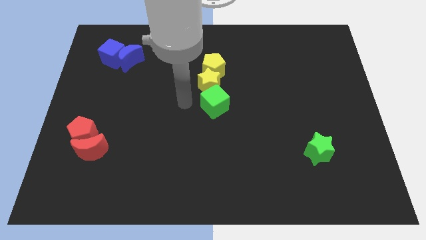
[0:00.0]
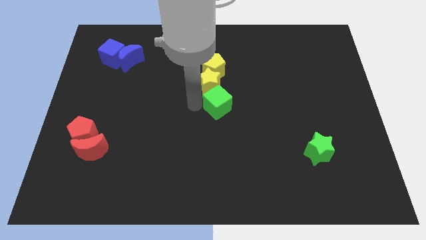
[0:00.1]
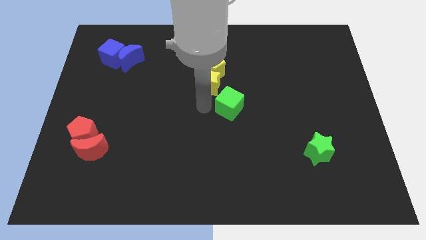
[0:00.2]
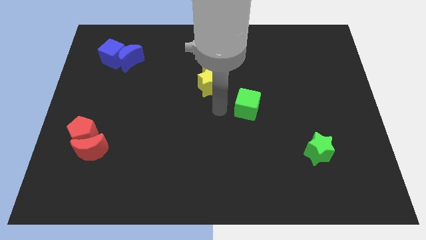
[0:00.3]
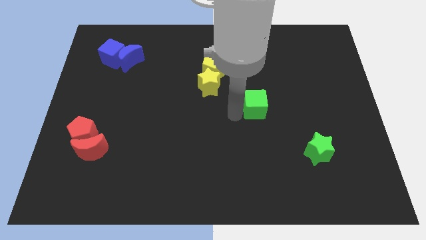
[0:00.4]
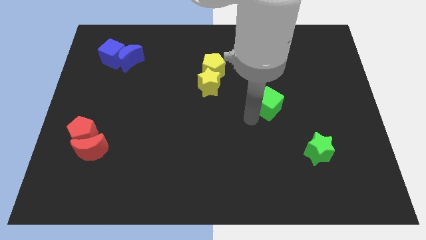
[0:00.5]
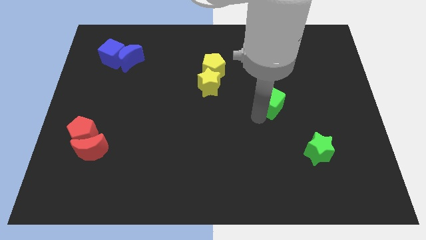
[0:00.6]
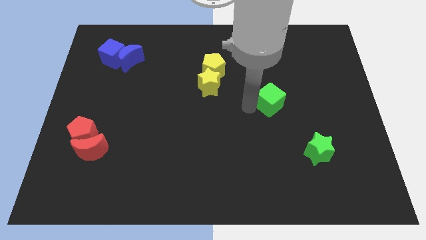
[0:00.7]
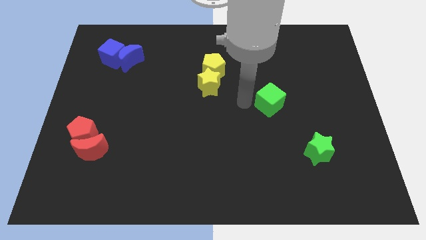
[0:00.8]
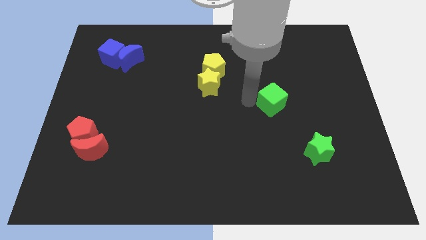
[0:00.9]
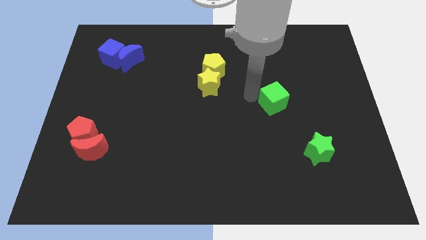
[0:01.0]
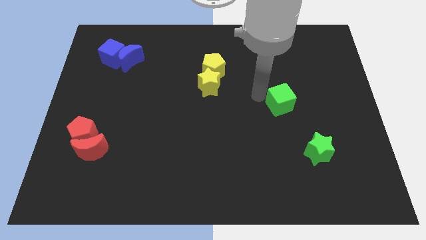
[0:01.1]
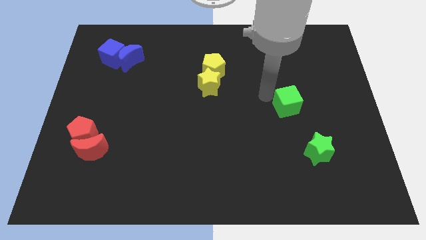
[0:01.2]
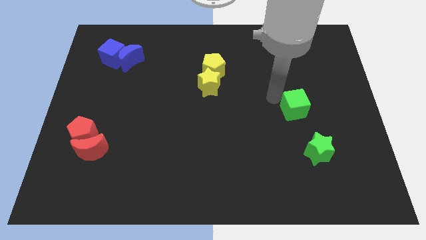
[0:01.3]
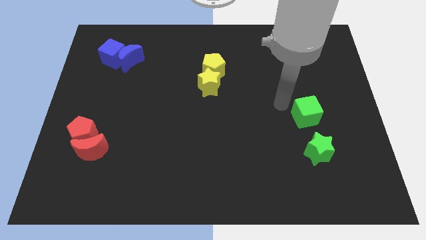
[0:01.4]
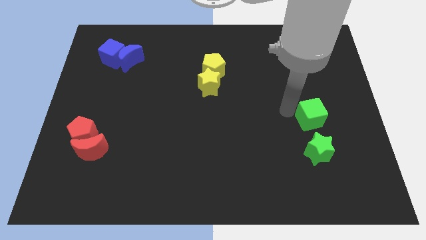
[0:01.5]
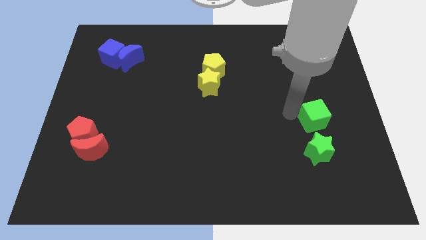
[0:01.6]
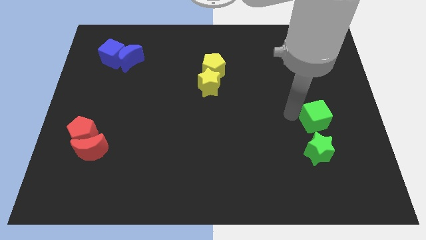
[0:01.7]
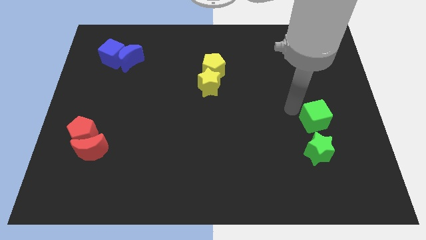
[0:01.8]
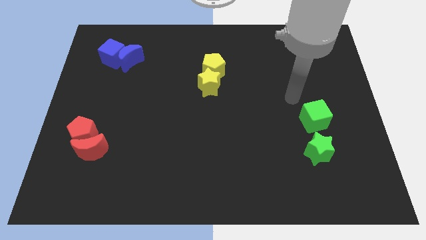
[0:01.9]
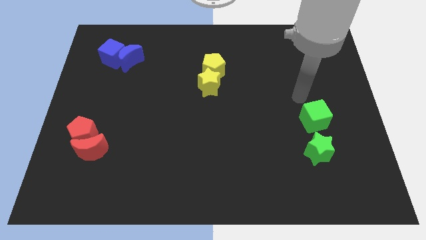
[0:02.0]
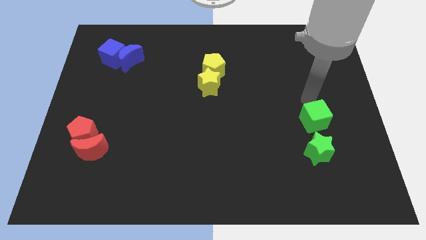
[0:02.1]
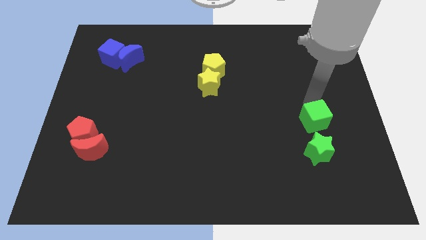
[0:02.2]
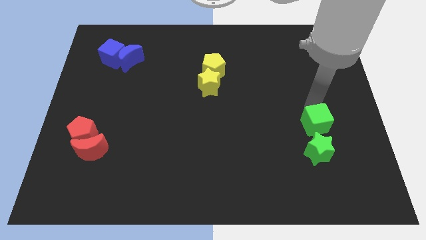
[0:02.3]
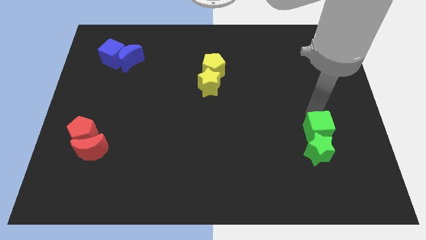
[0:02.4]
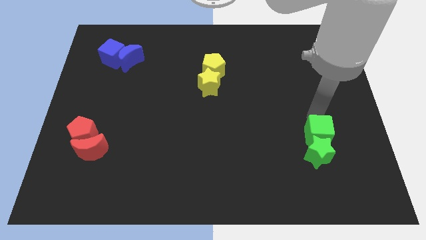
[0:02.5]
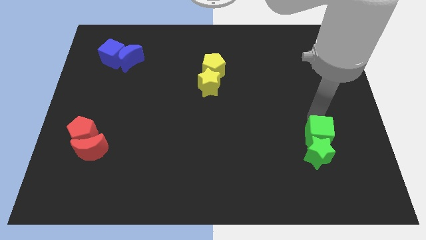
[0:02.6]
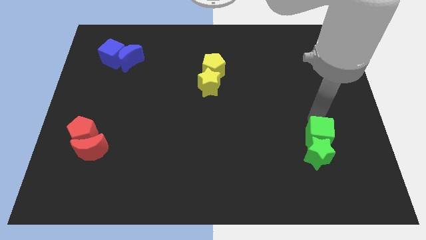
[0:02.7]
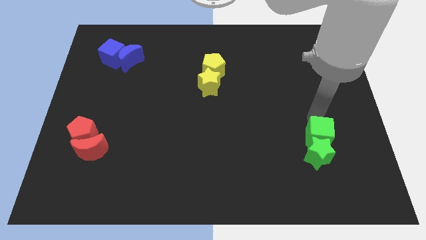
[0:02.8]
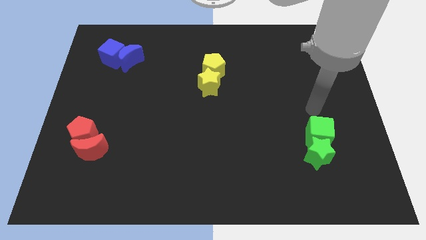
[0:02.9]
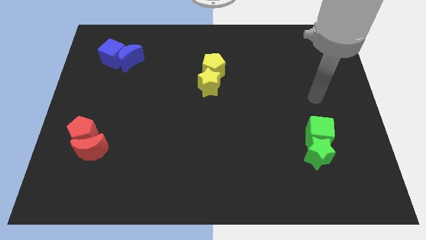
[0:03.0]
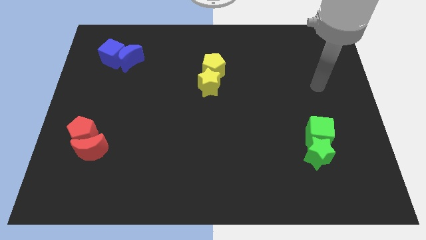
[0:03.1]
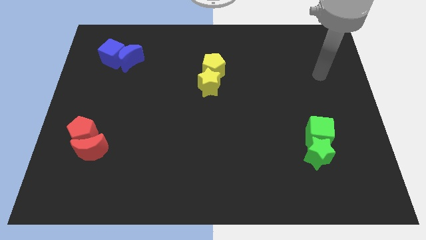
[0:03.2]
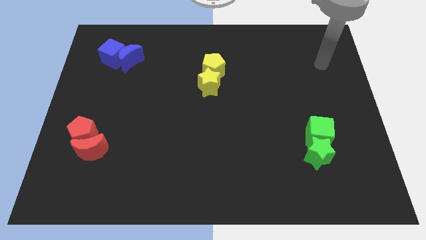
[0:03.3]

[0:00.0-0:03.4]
slide the green cube close to green star

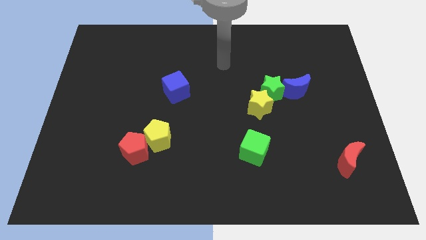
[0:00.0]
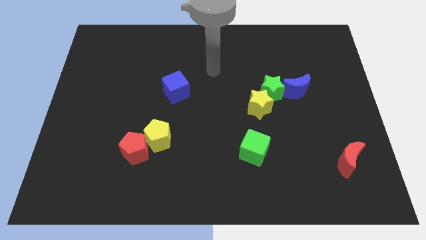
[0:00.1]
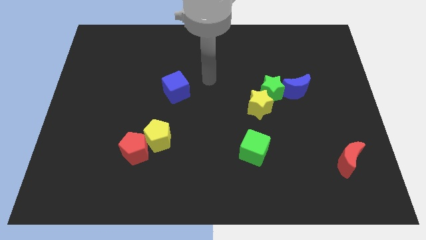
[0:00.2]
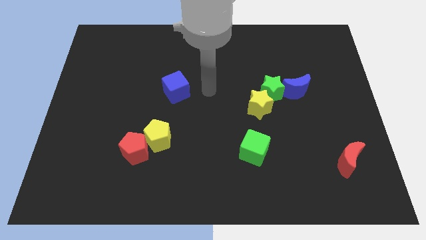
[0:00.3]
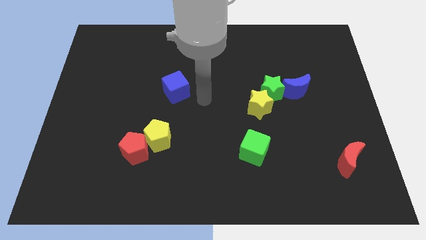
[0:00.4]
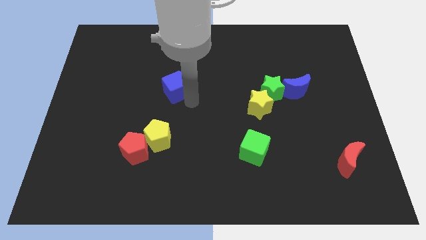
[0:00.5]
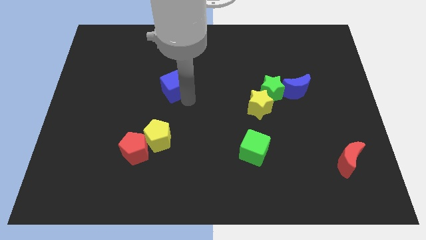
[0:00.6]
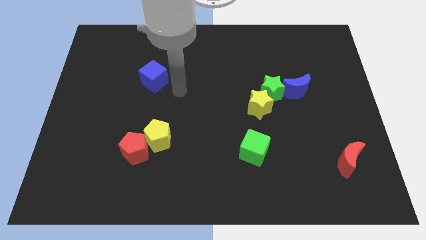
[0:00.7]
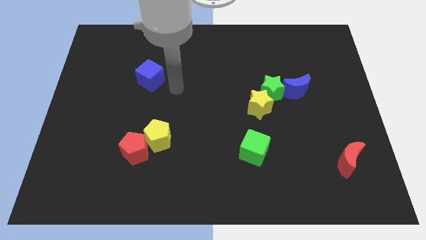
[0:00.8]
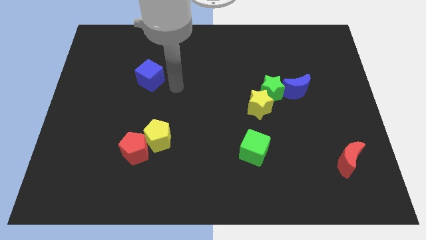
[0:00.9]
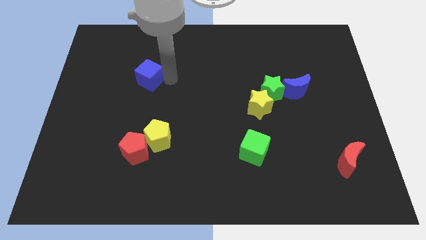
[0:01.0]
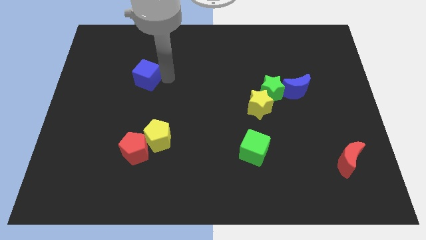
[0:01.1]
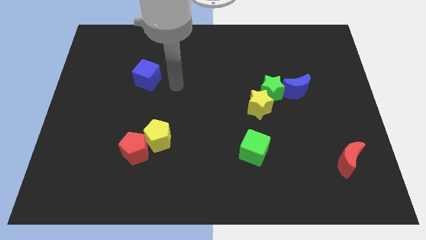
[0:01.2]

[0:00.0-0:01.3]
slightly move the blue cube to the left of the board

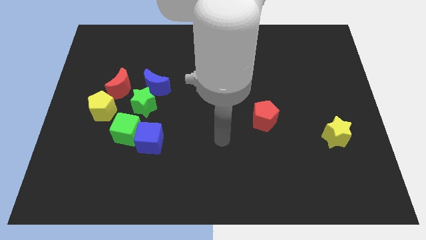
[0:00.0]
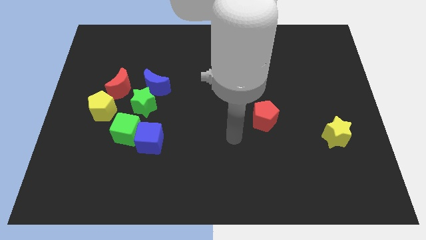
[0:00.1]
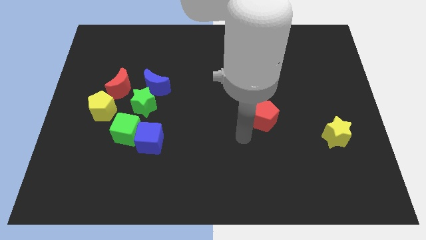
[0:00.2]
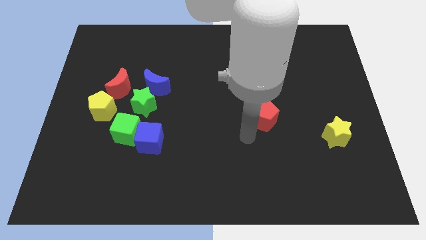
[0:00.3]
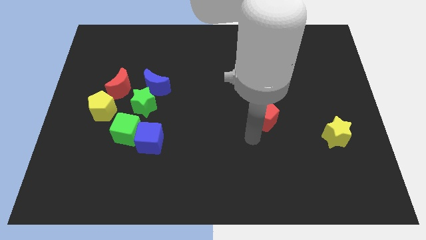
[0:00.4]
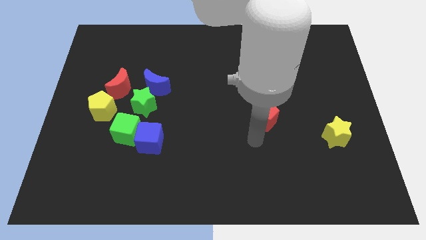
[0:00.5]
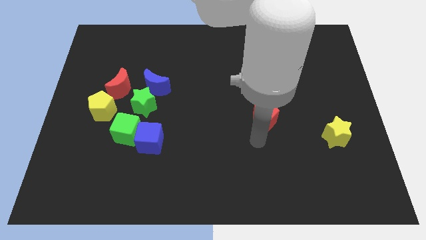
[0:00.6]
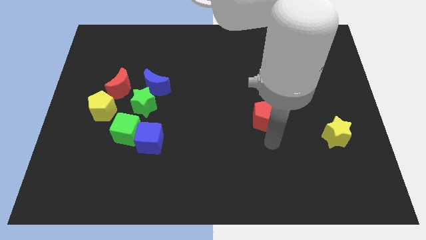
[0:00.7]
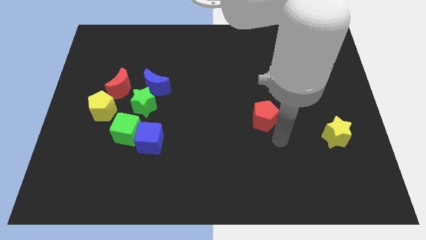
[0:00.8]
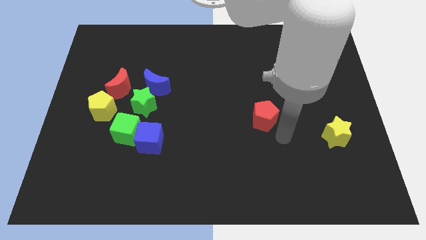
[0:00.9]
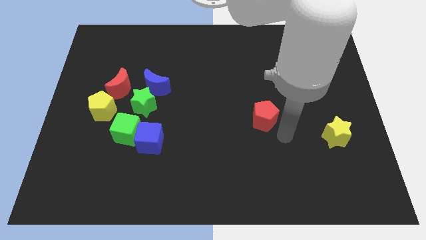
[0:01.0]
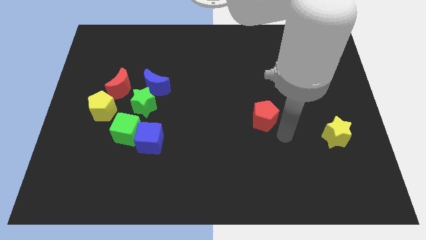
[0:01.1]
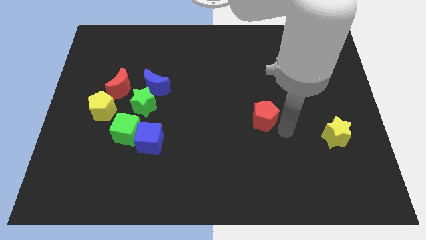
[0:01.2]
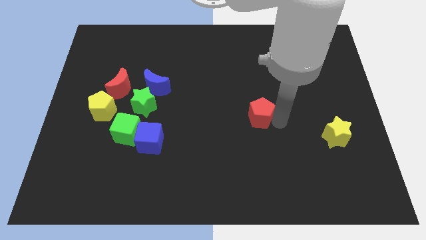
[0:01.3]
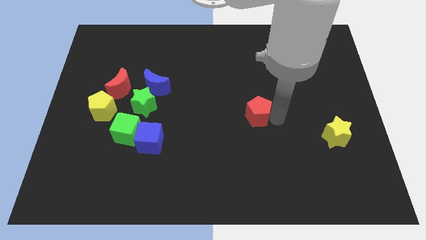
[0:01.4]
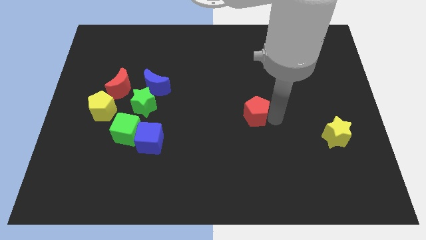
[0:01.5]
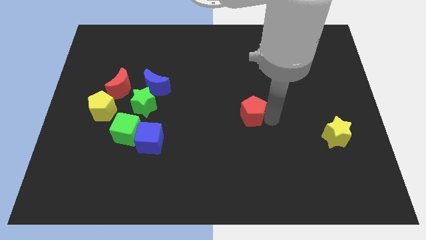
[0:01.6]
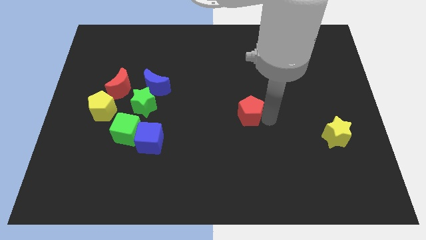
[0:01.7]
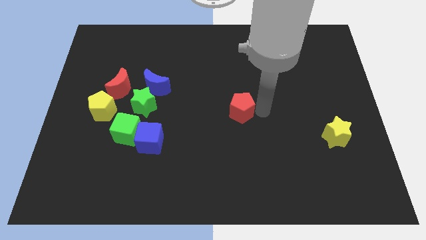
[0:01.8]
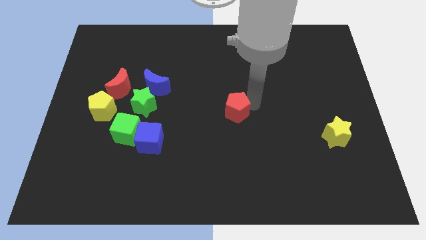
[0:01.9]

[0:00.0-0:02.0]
move the red pentagon towards the blue cube

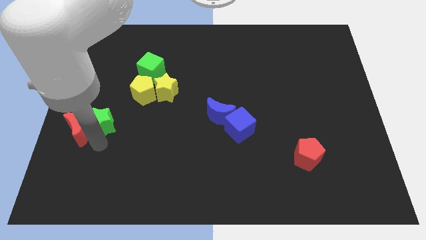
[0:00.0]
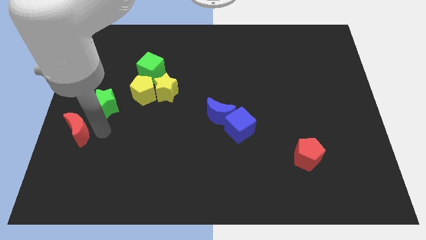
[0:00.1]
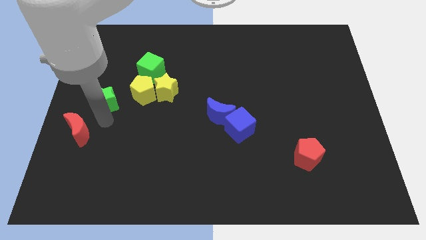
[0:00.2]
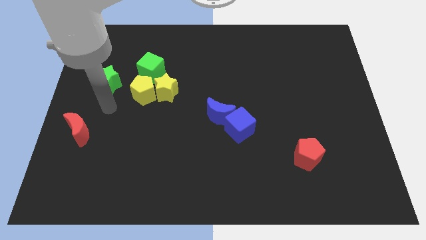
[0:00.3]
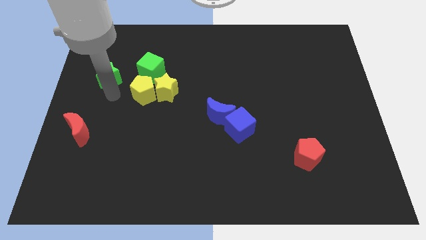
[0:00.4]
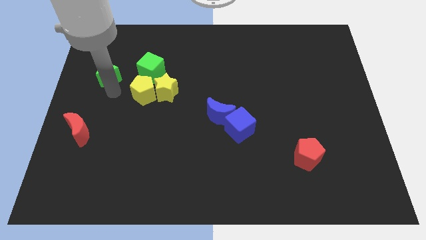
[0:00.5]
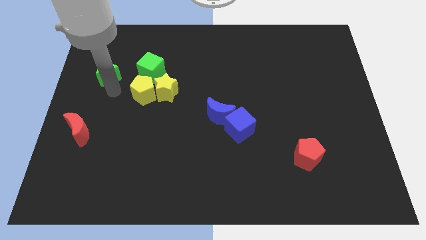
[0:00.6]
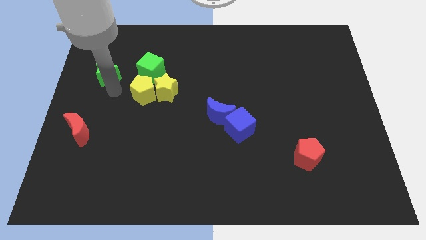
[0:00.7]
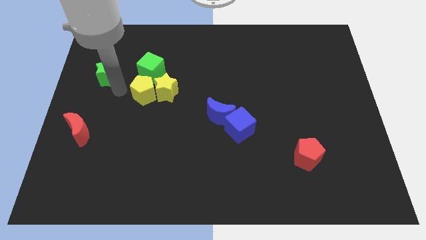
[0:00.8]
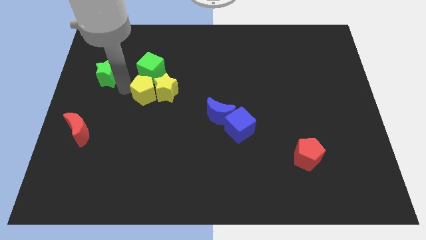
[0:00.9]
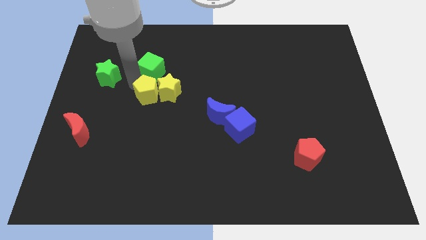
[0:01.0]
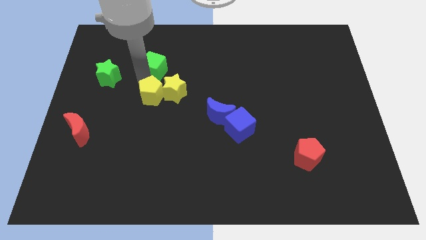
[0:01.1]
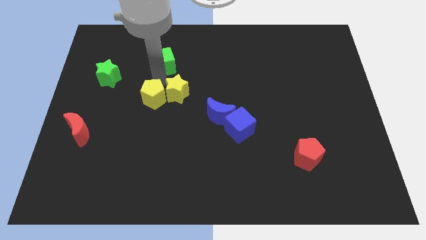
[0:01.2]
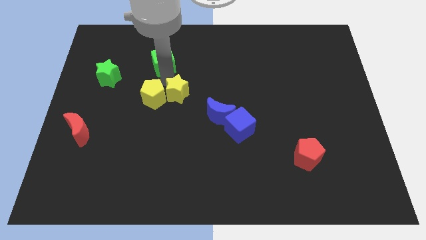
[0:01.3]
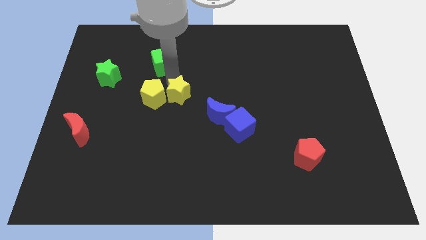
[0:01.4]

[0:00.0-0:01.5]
place the green star above the yellow pentagon

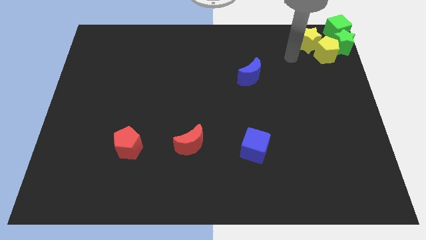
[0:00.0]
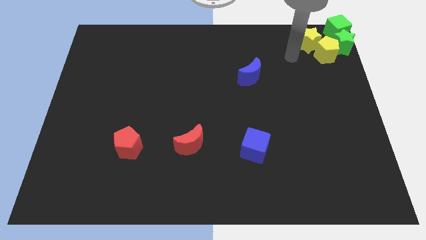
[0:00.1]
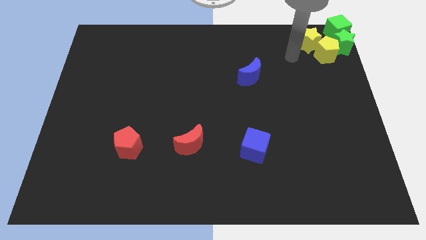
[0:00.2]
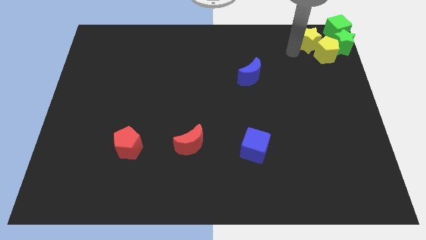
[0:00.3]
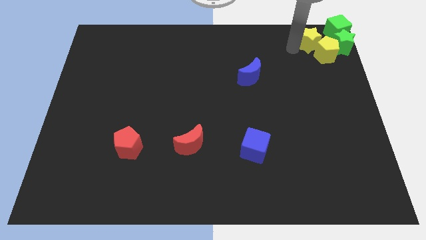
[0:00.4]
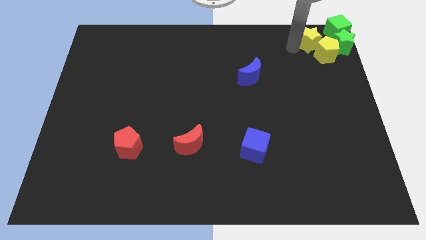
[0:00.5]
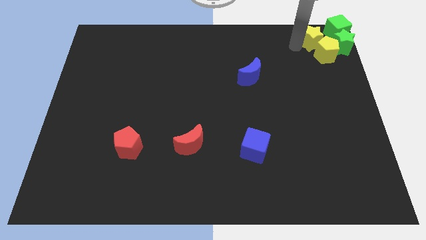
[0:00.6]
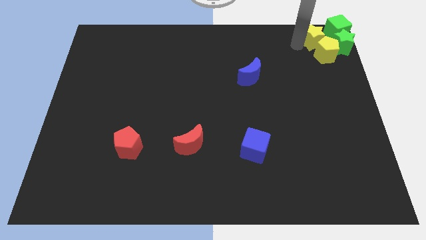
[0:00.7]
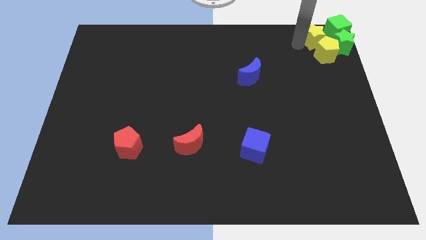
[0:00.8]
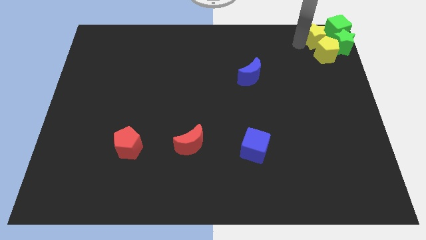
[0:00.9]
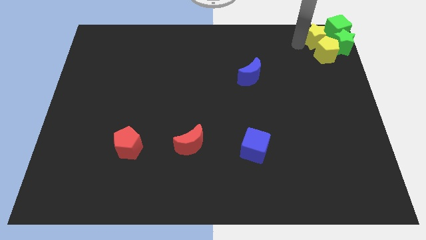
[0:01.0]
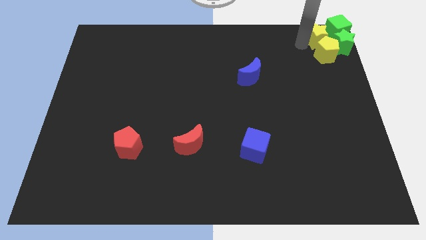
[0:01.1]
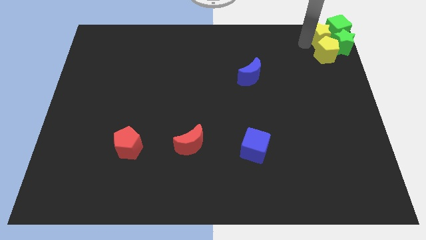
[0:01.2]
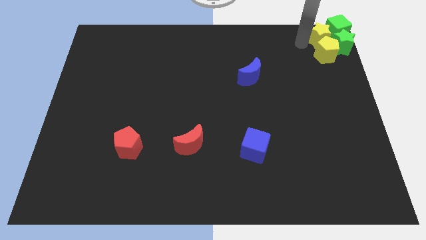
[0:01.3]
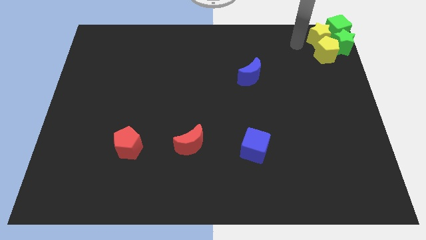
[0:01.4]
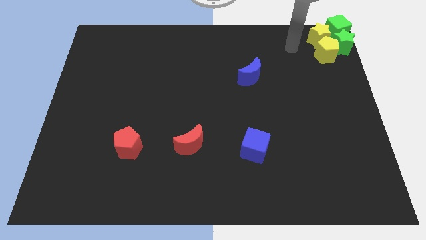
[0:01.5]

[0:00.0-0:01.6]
move the yellow star to the left of the green cube
